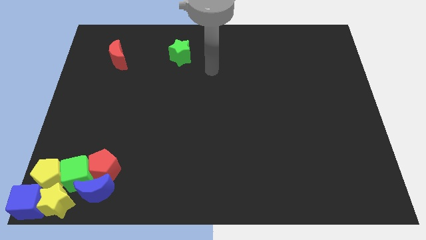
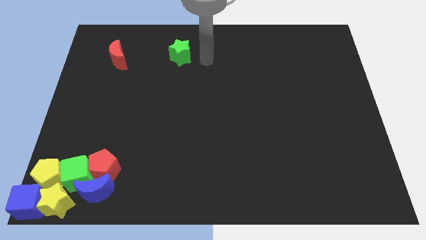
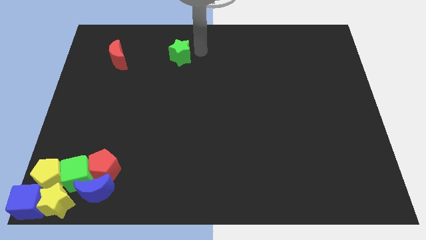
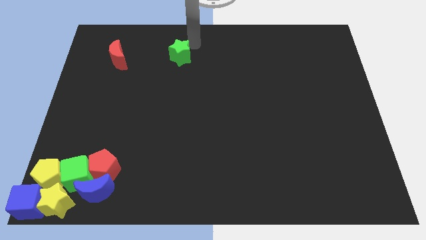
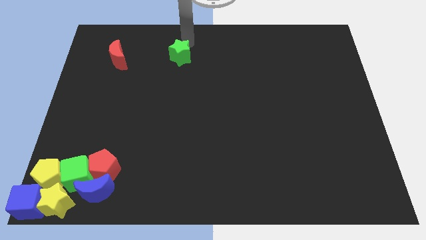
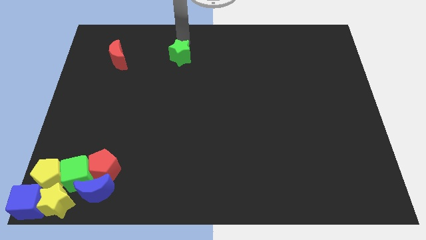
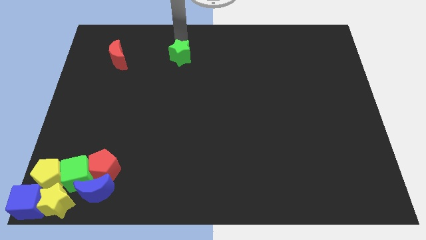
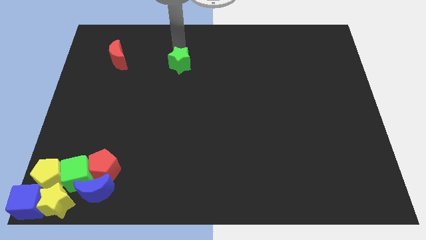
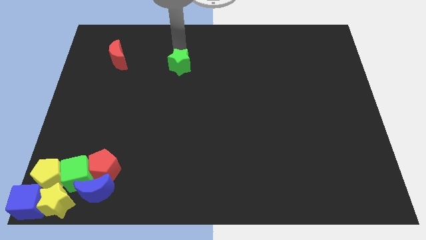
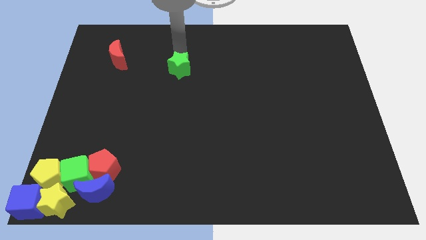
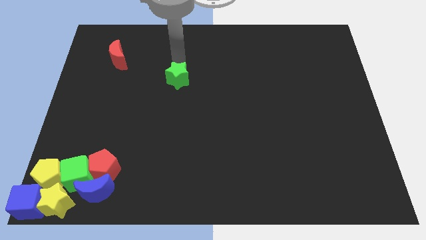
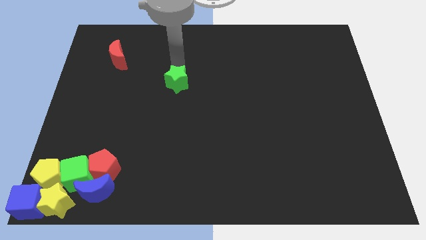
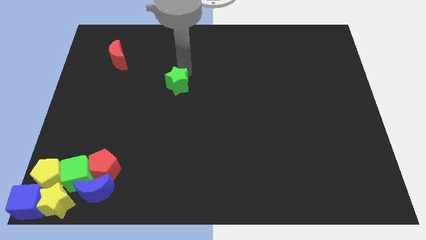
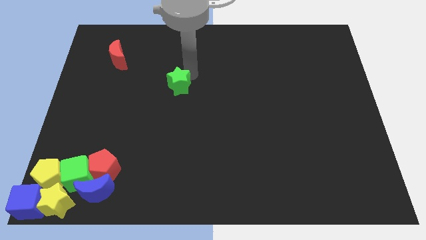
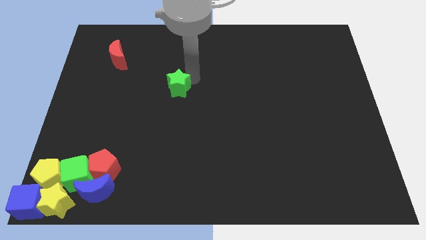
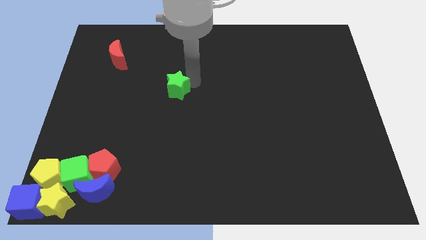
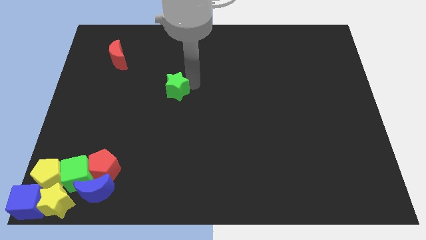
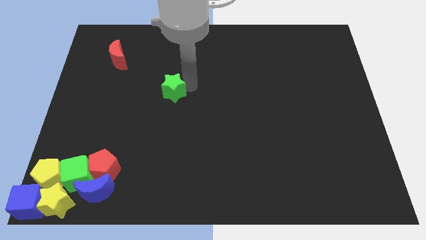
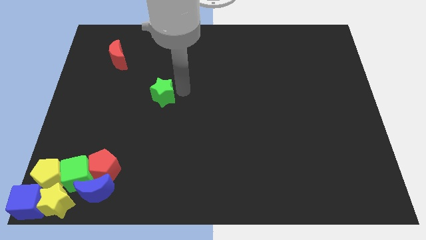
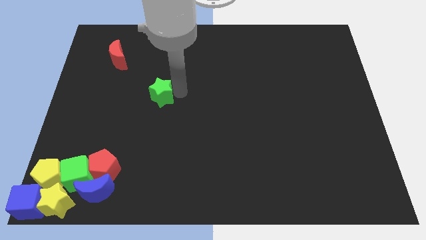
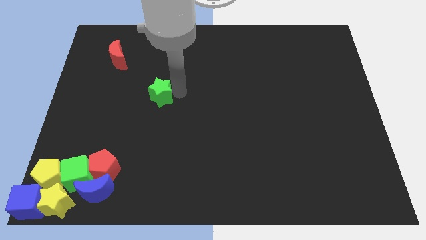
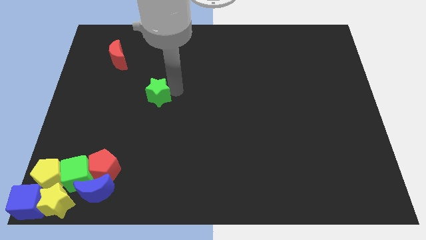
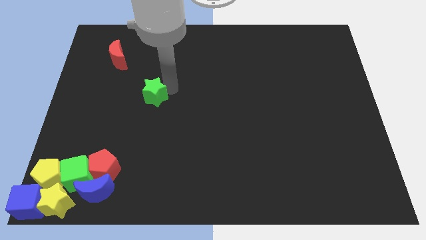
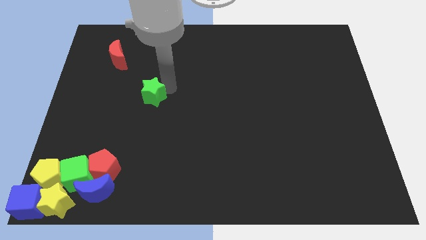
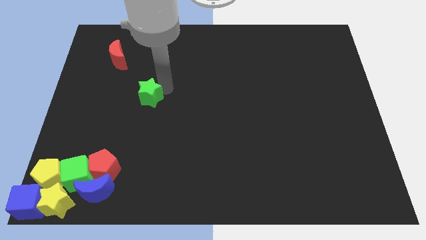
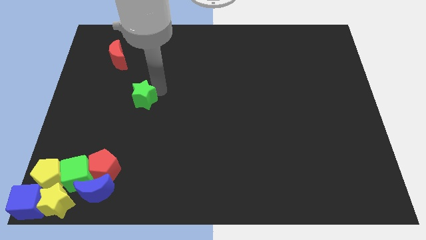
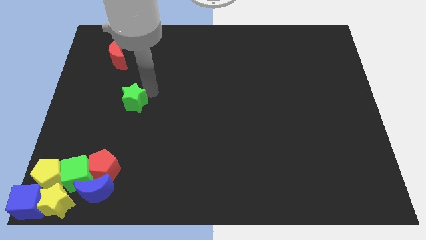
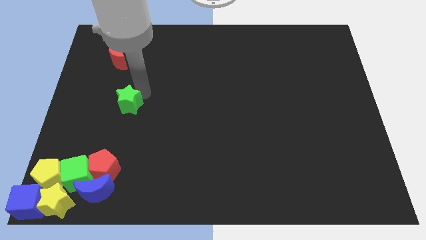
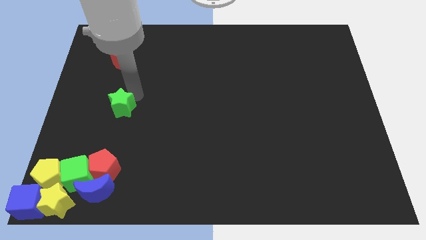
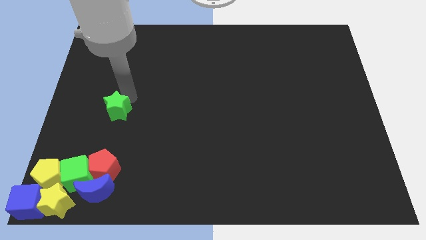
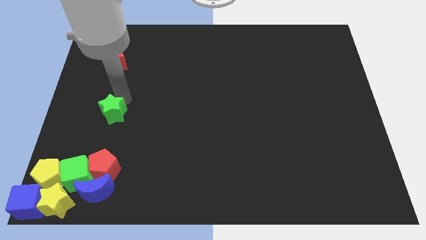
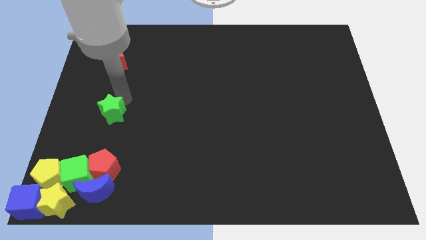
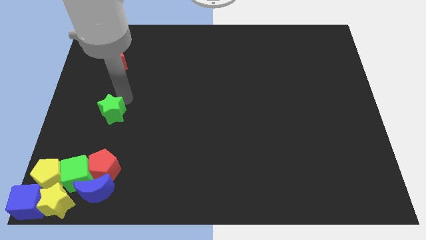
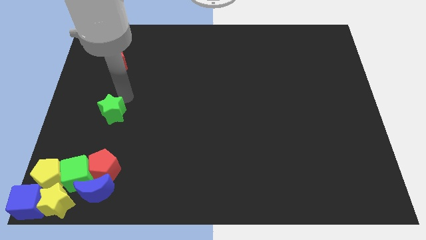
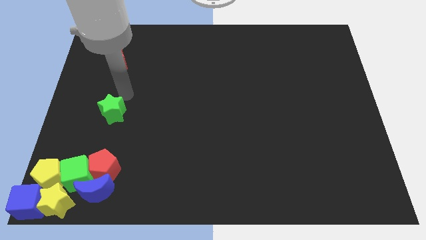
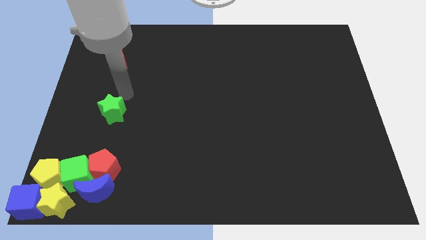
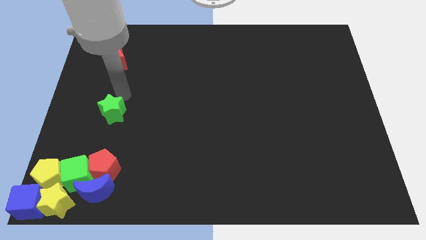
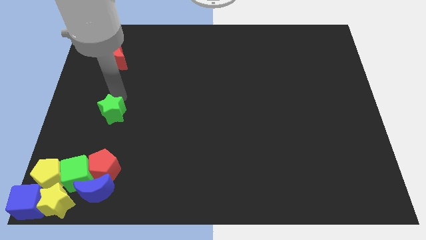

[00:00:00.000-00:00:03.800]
put the green star at the bottom side of the red moon

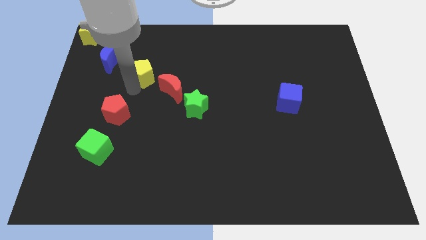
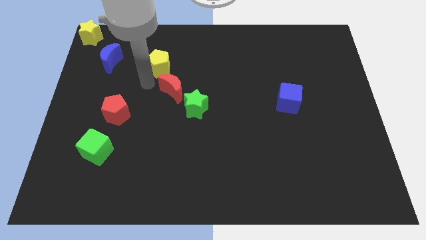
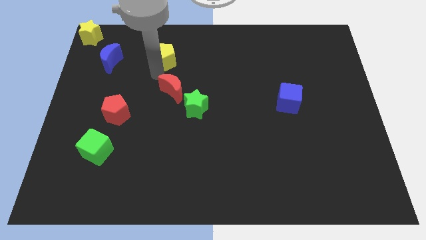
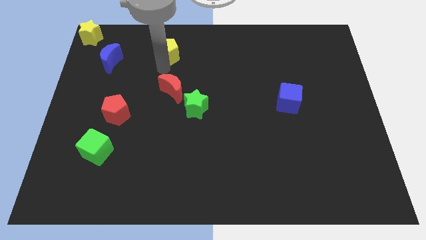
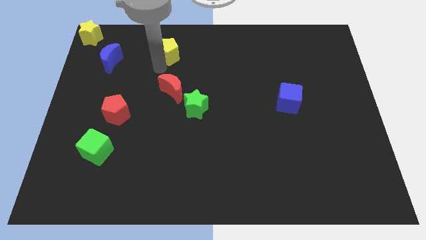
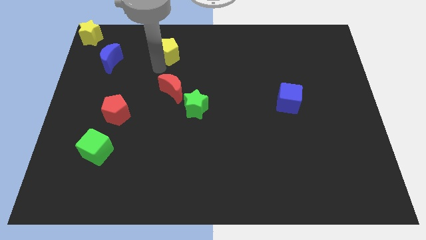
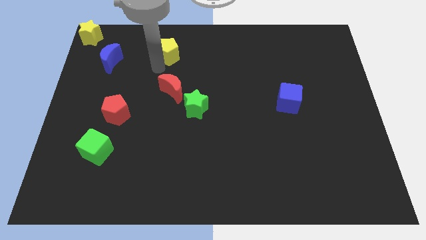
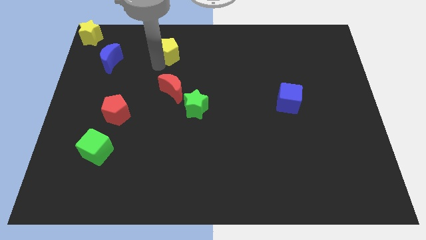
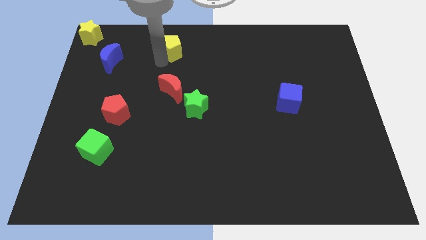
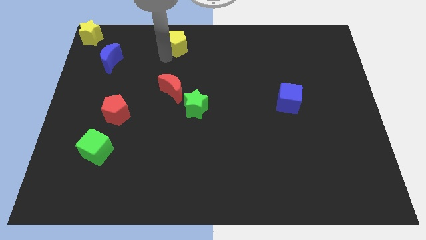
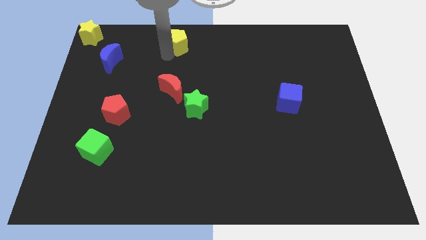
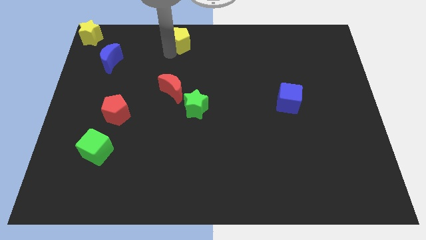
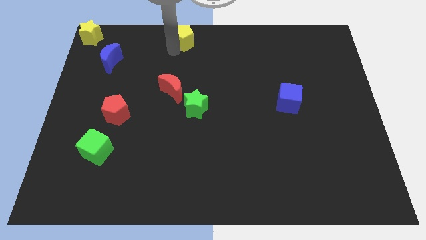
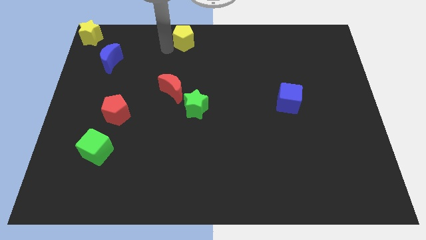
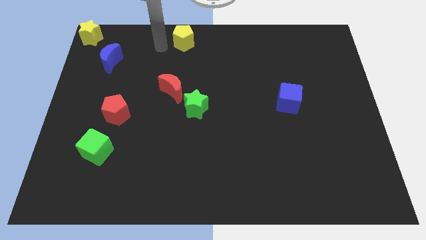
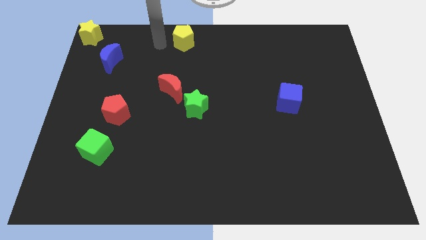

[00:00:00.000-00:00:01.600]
push the yellow pentagon upward

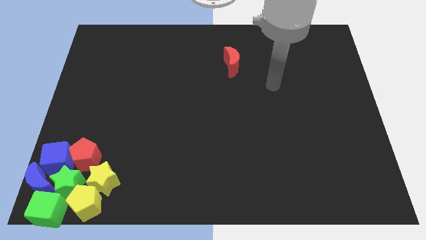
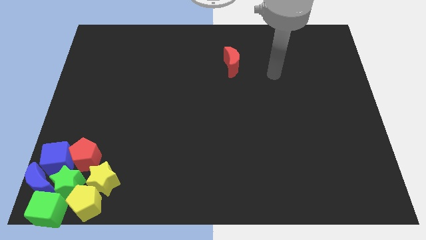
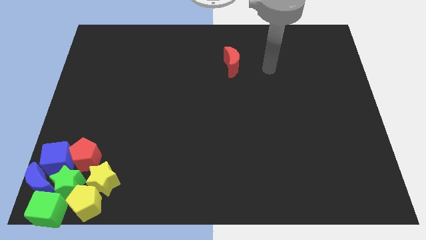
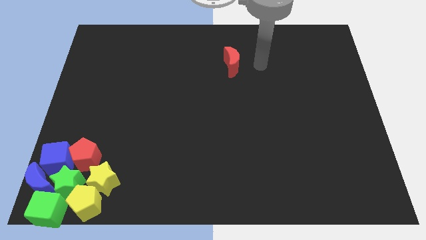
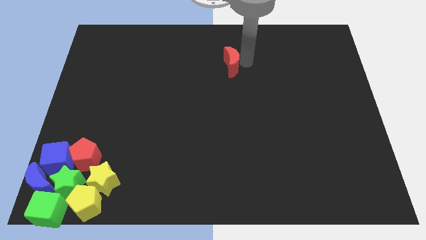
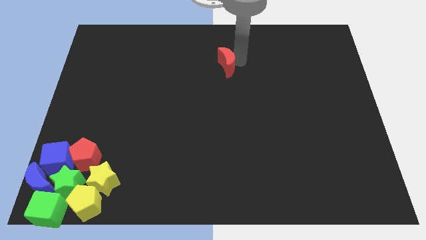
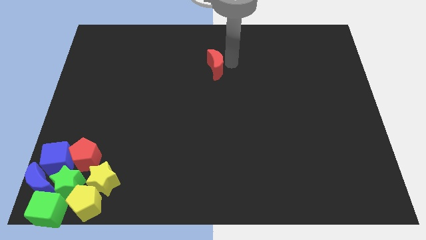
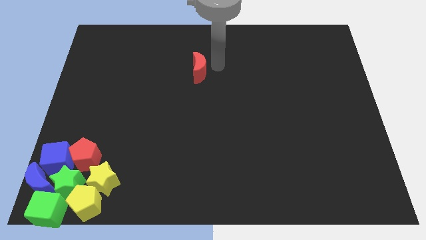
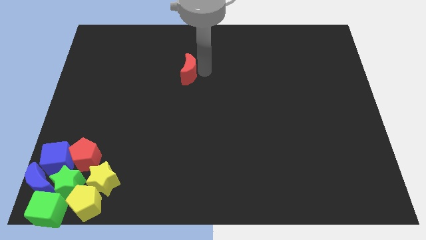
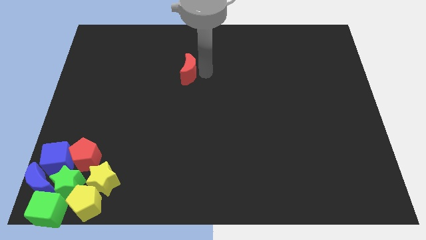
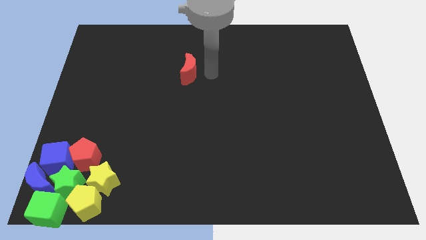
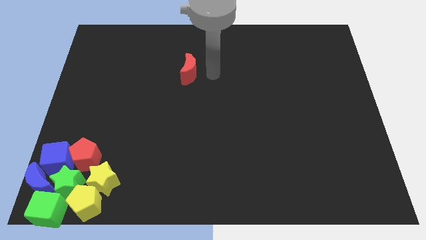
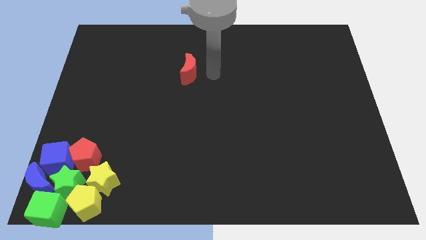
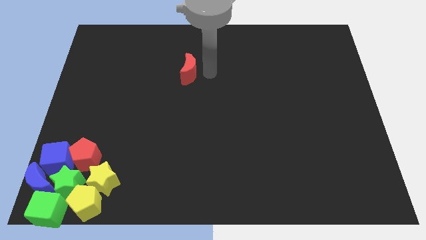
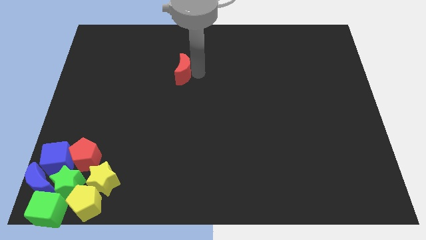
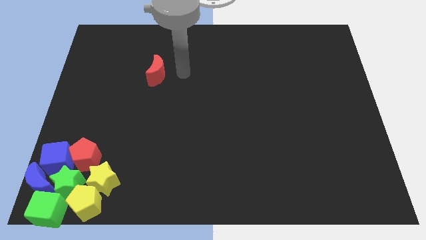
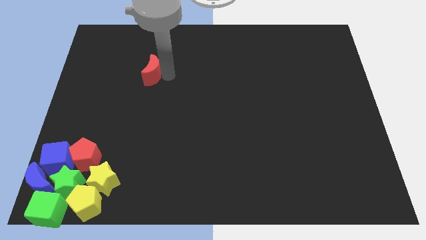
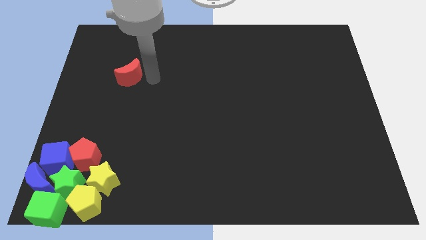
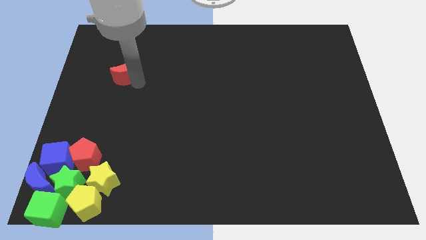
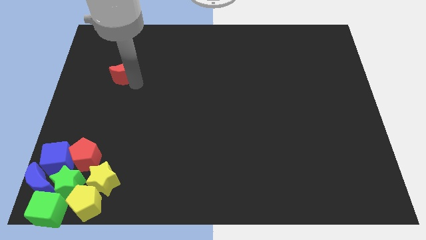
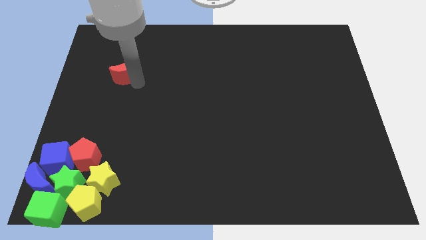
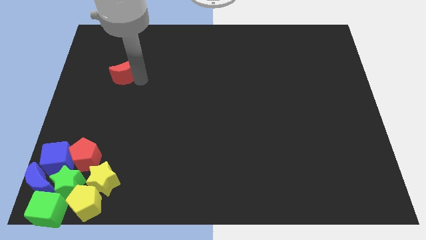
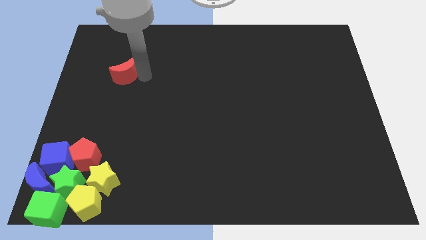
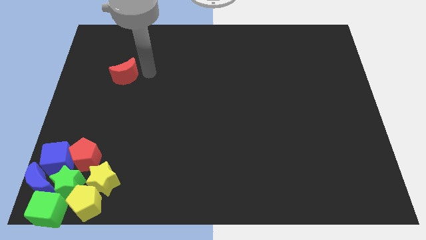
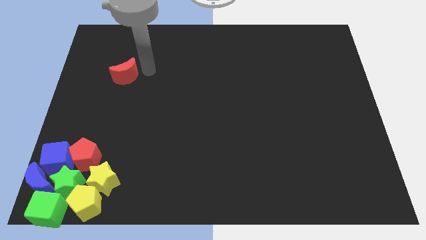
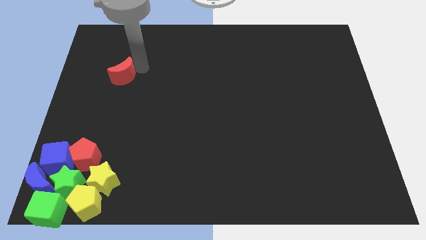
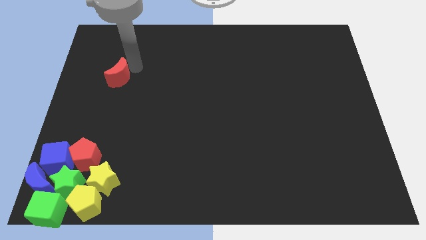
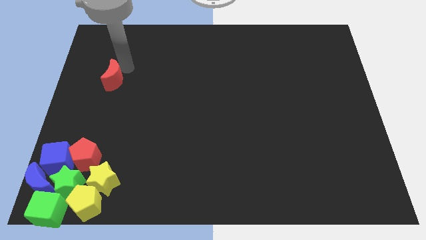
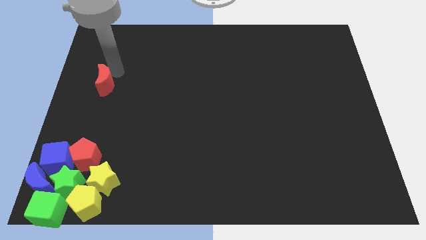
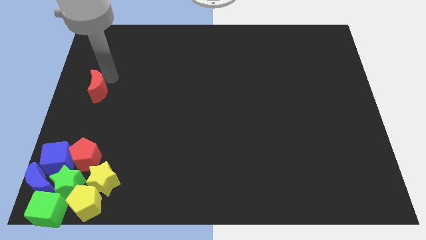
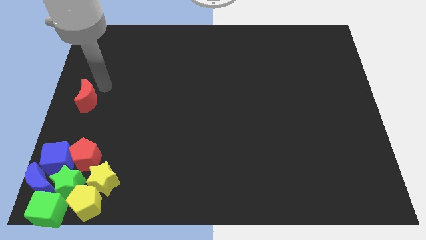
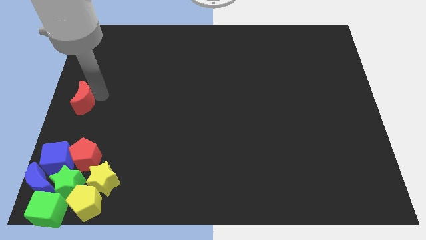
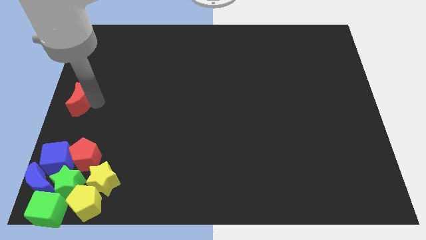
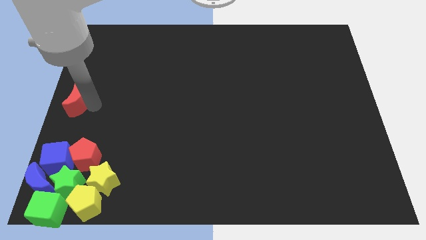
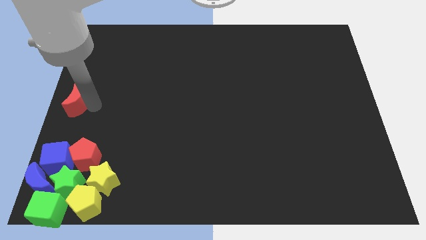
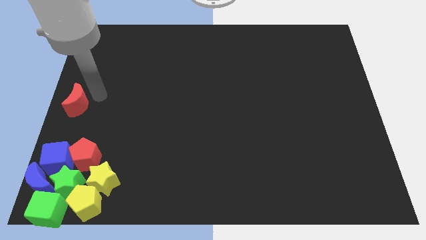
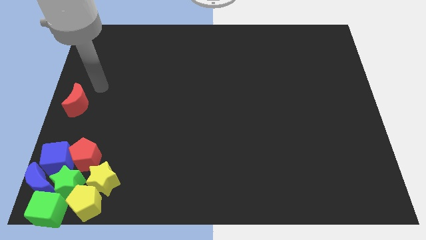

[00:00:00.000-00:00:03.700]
put the red crescent vertically above the blue cube

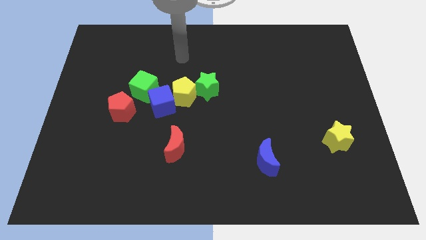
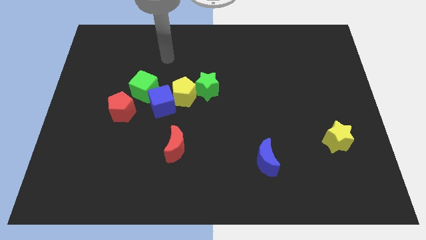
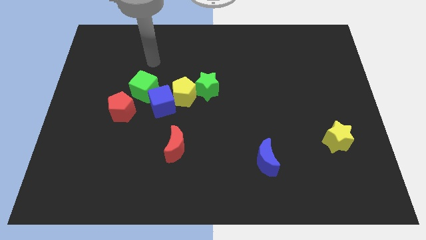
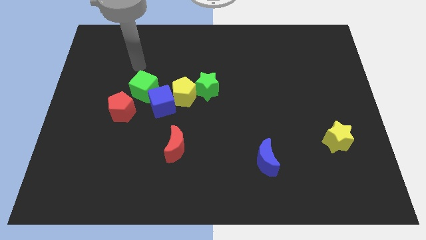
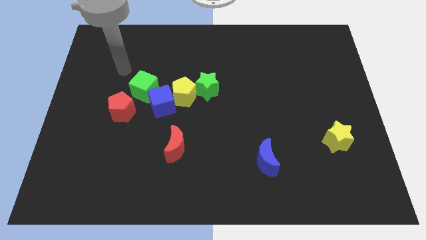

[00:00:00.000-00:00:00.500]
move the arm above to the green cube
